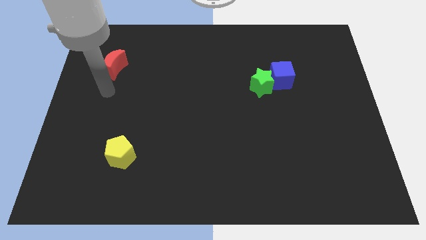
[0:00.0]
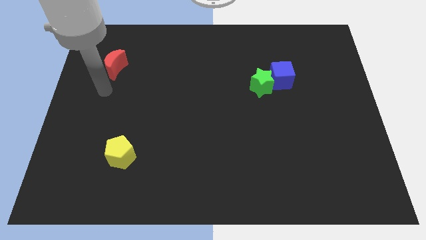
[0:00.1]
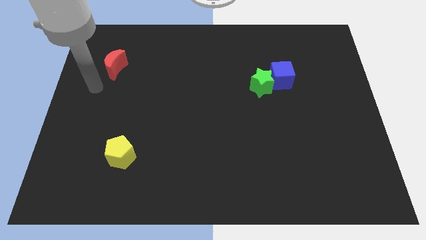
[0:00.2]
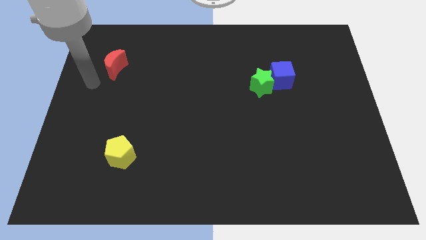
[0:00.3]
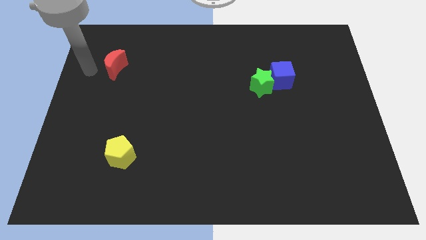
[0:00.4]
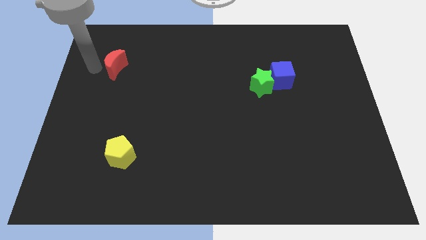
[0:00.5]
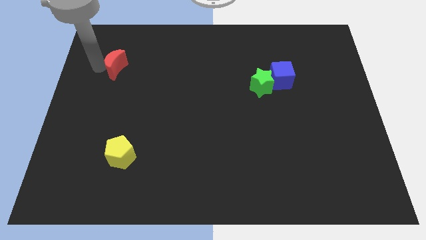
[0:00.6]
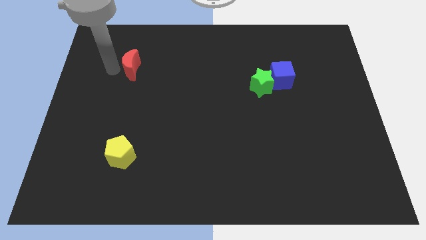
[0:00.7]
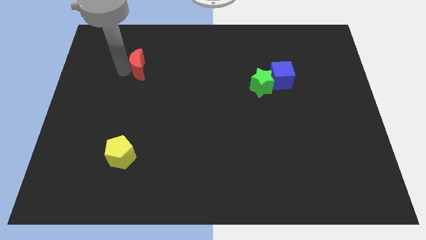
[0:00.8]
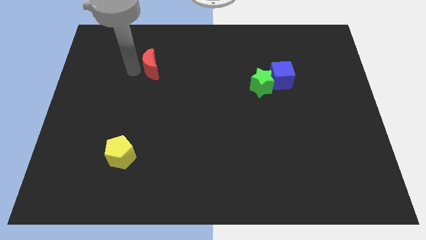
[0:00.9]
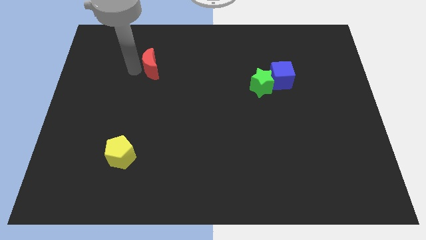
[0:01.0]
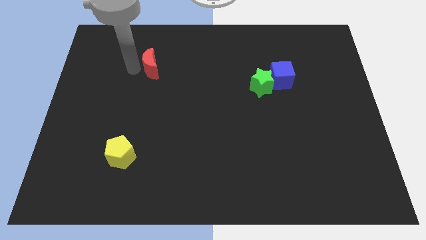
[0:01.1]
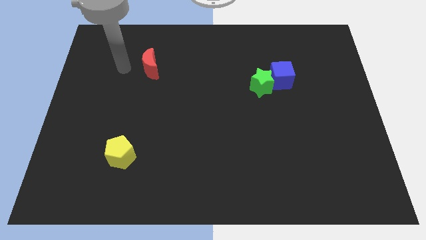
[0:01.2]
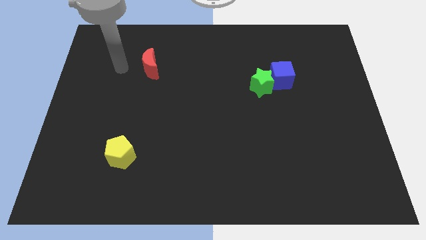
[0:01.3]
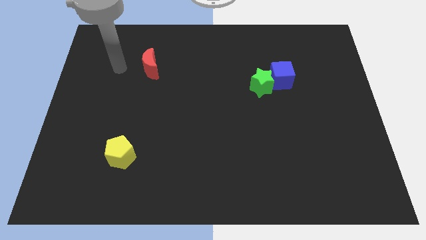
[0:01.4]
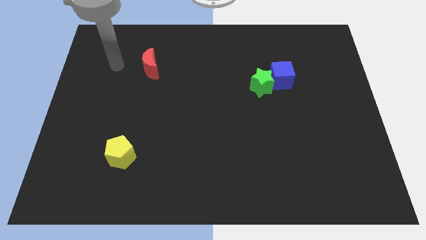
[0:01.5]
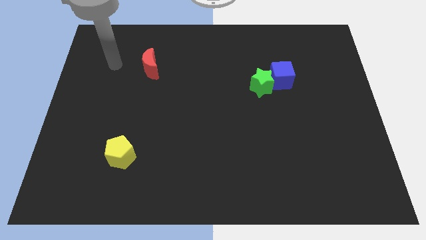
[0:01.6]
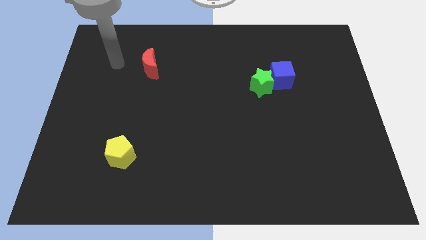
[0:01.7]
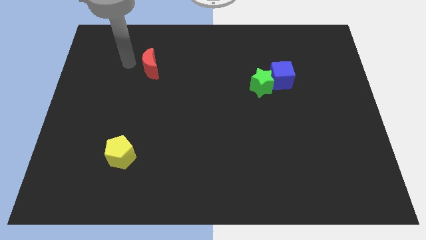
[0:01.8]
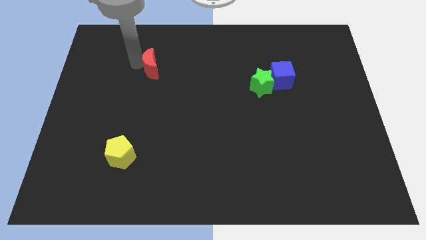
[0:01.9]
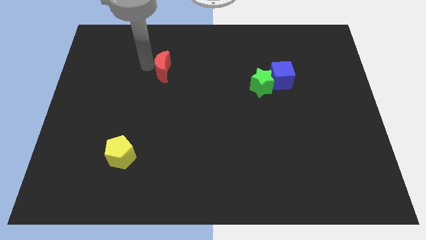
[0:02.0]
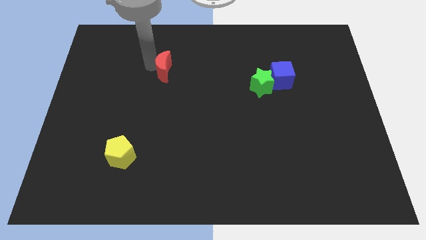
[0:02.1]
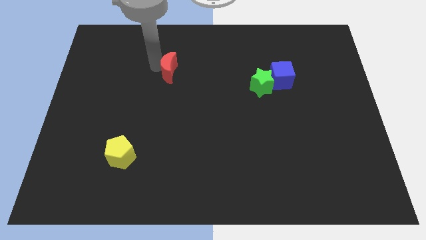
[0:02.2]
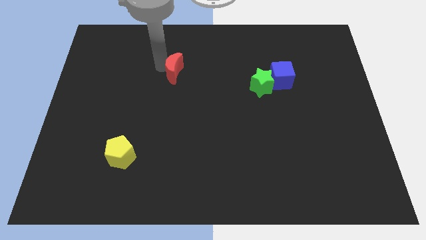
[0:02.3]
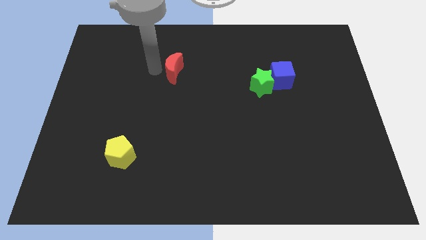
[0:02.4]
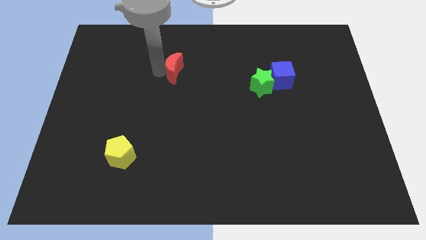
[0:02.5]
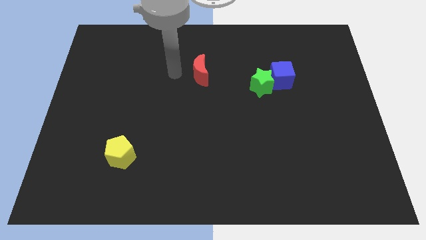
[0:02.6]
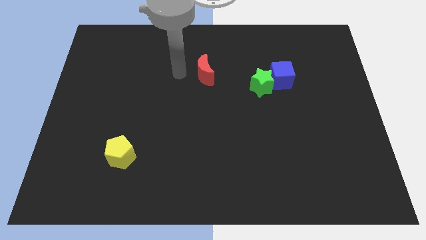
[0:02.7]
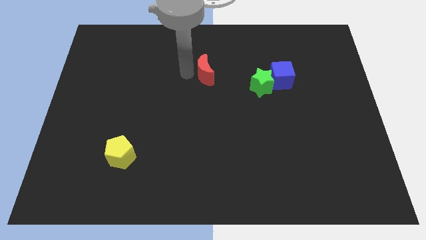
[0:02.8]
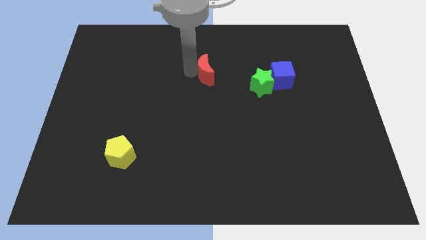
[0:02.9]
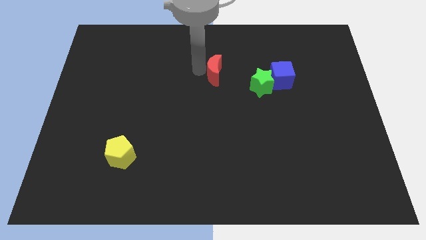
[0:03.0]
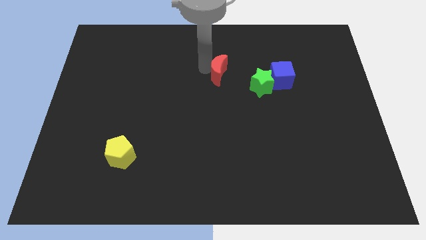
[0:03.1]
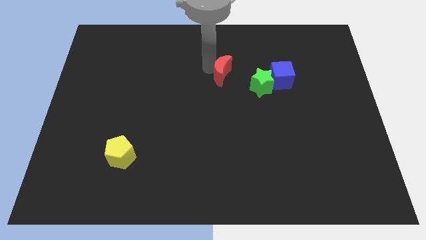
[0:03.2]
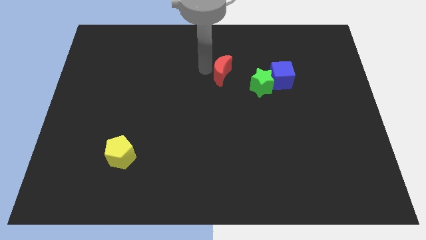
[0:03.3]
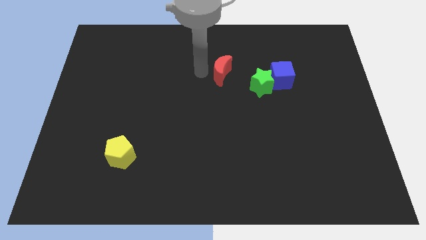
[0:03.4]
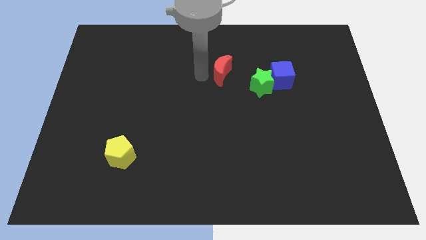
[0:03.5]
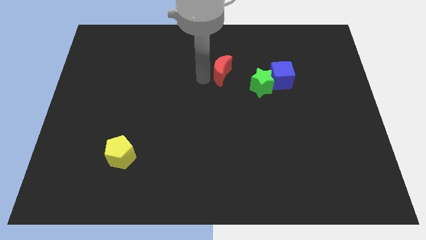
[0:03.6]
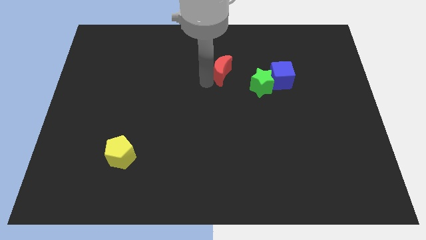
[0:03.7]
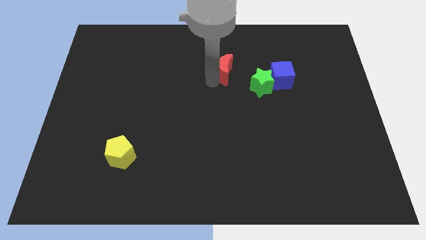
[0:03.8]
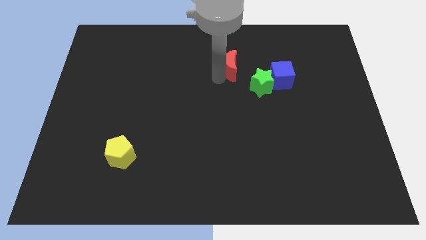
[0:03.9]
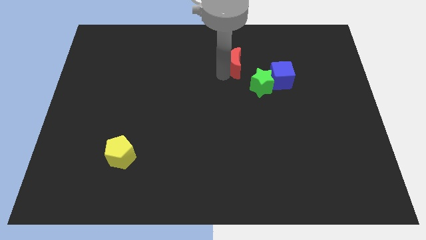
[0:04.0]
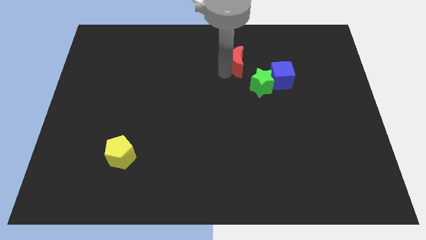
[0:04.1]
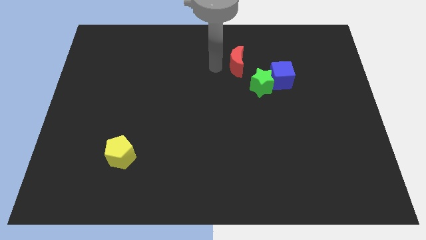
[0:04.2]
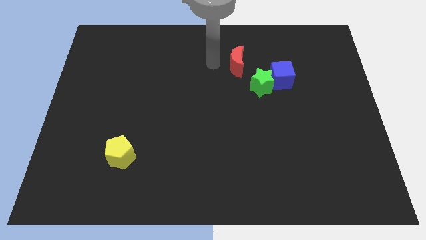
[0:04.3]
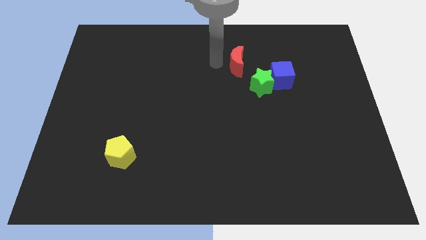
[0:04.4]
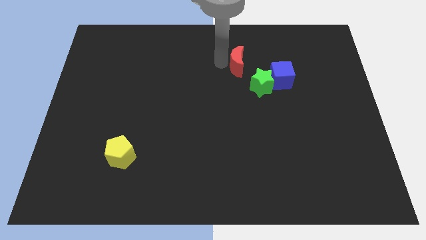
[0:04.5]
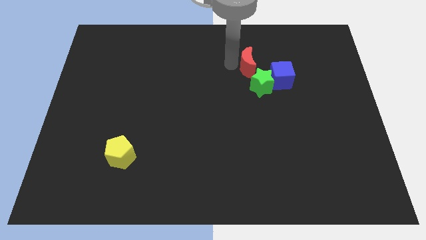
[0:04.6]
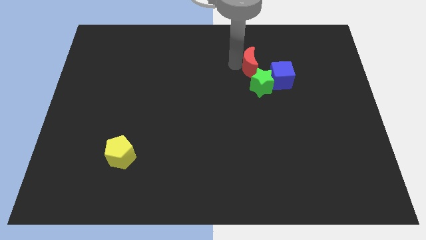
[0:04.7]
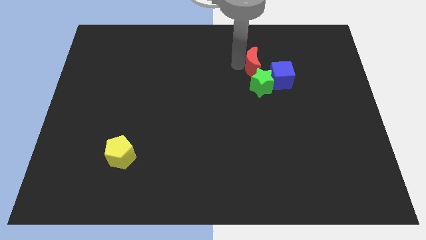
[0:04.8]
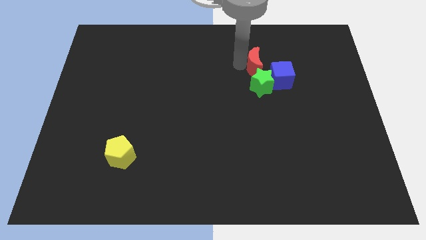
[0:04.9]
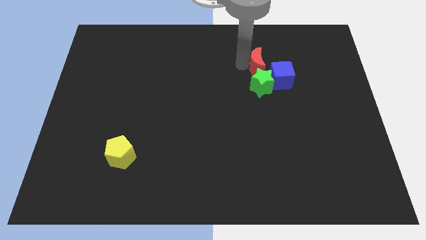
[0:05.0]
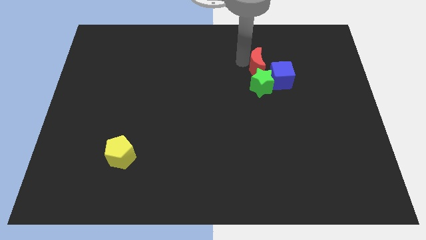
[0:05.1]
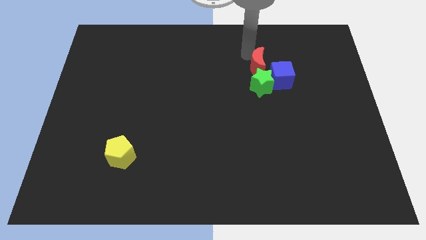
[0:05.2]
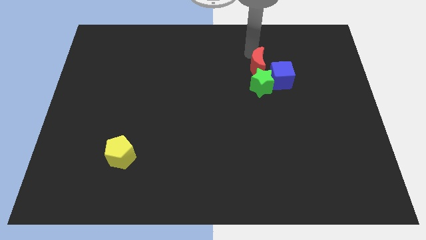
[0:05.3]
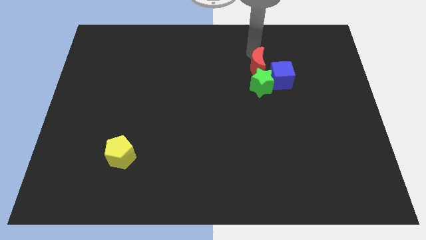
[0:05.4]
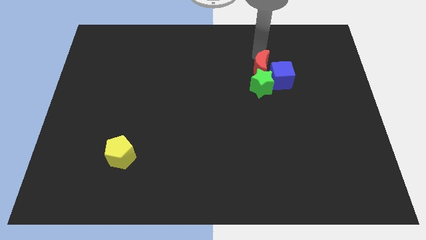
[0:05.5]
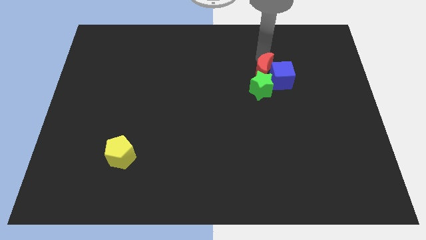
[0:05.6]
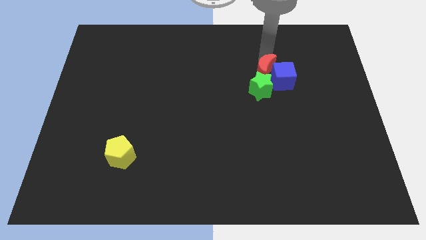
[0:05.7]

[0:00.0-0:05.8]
move the moon next to the cube

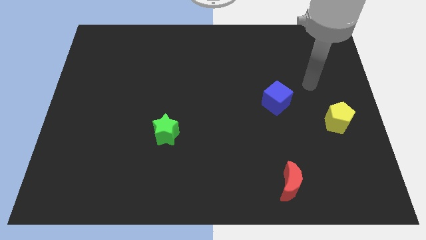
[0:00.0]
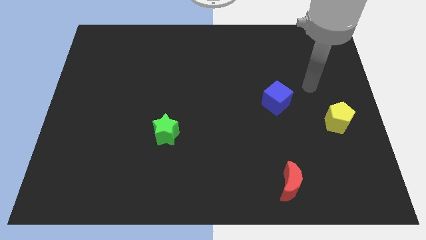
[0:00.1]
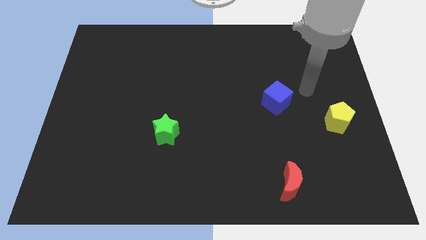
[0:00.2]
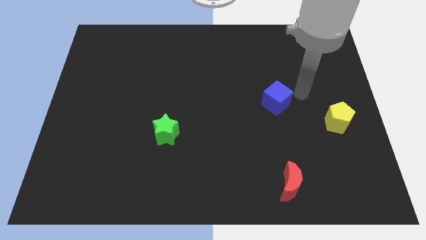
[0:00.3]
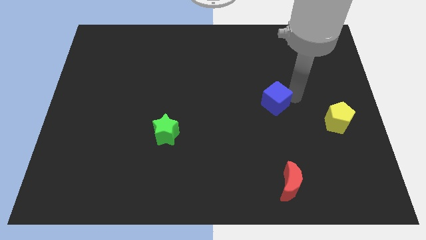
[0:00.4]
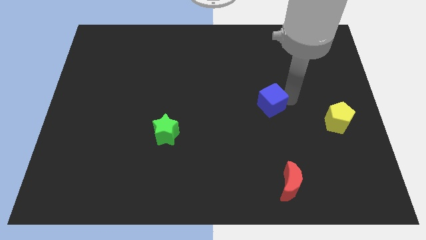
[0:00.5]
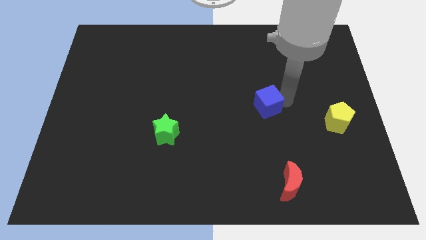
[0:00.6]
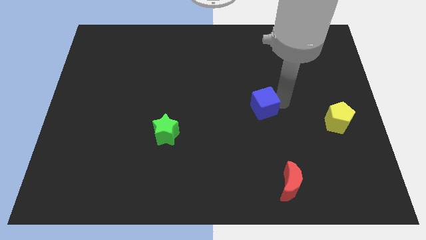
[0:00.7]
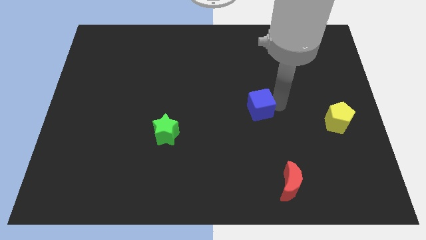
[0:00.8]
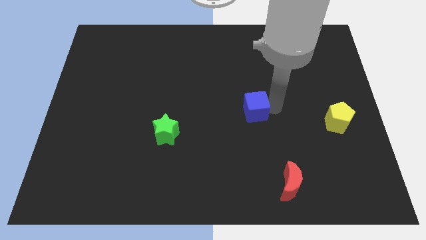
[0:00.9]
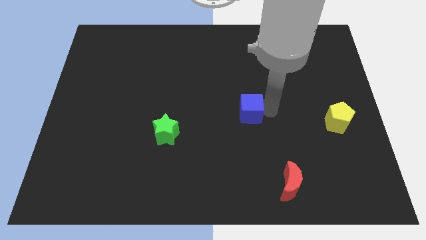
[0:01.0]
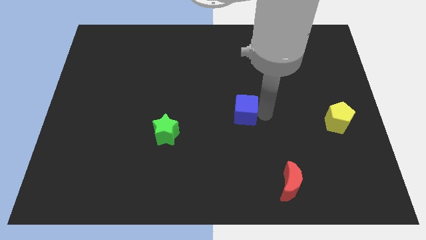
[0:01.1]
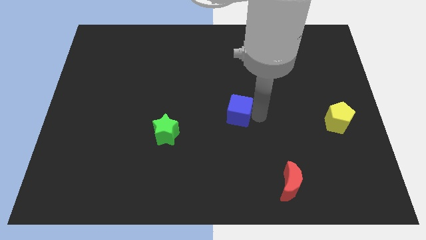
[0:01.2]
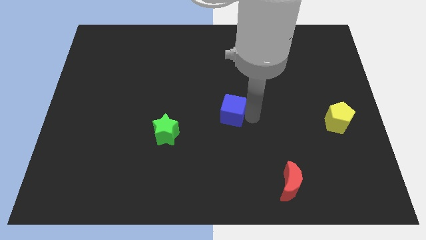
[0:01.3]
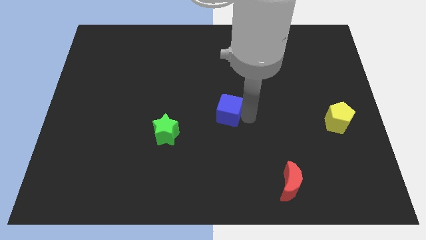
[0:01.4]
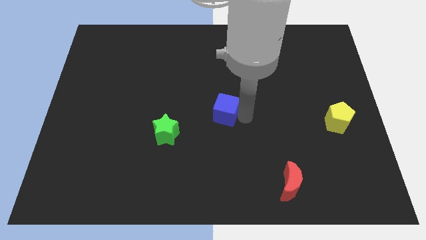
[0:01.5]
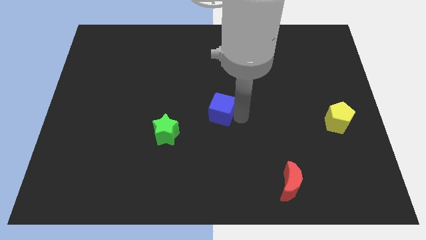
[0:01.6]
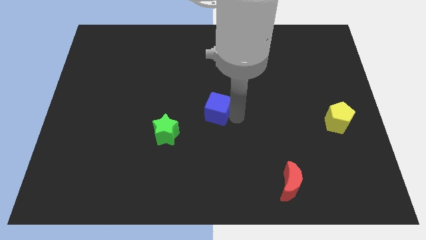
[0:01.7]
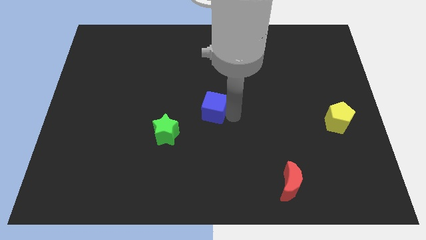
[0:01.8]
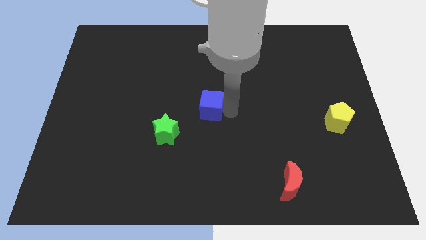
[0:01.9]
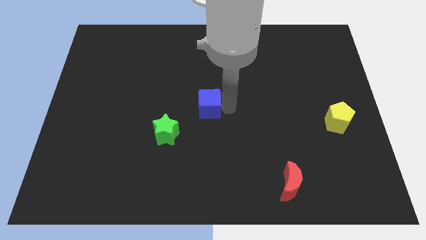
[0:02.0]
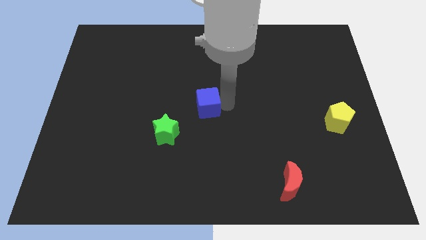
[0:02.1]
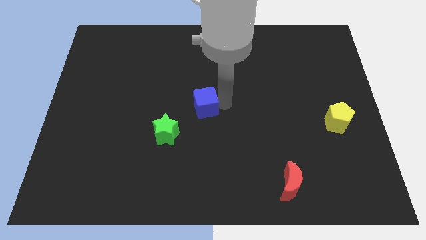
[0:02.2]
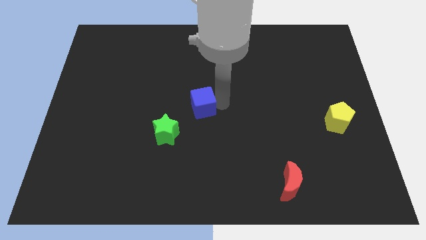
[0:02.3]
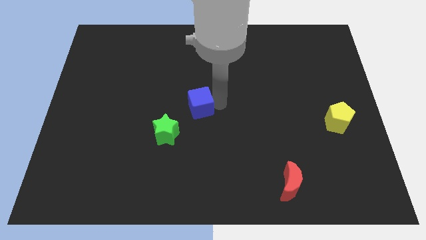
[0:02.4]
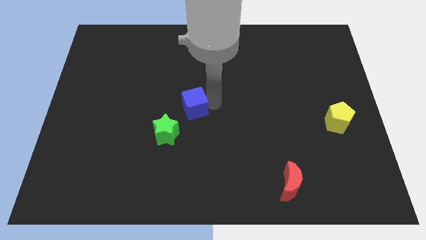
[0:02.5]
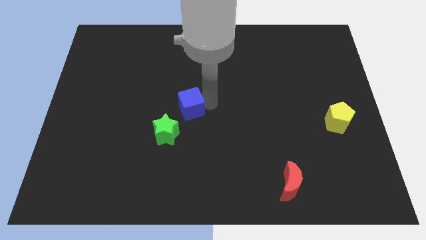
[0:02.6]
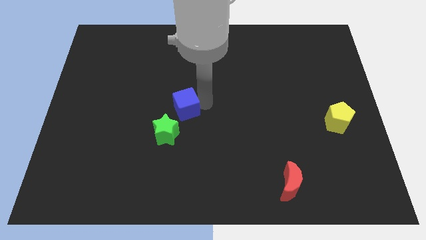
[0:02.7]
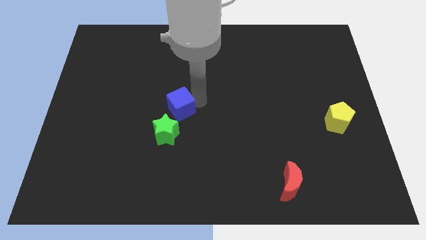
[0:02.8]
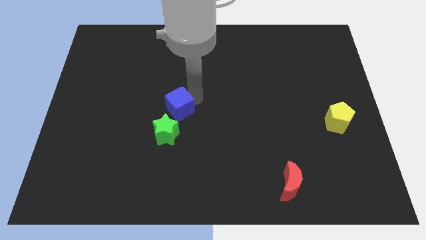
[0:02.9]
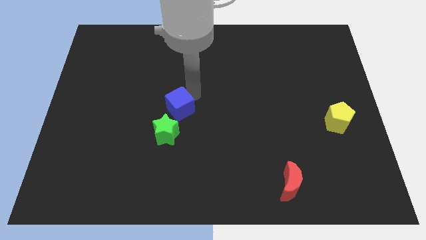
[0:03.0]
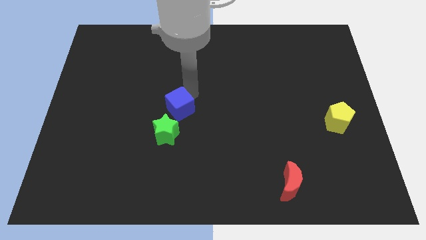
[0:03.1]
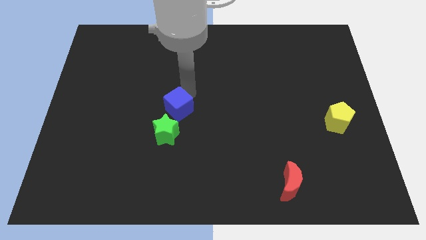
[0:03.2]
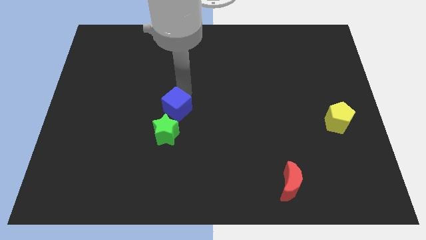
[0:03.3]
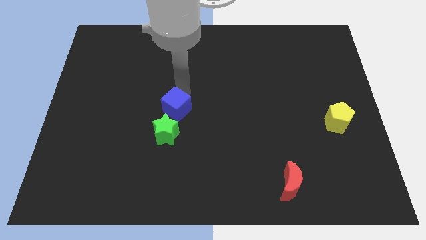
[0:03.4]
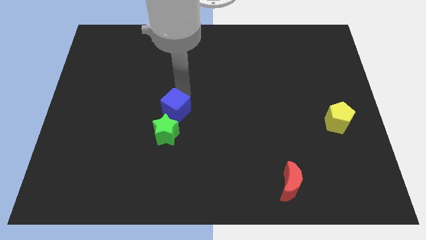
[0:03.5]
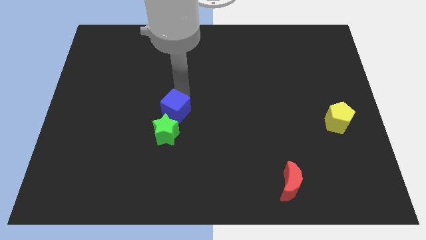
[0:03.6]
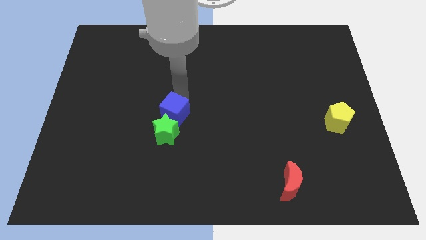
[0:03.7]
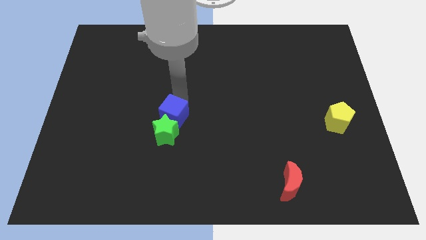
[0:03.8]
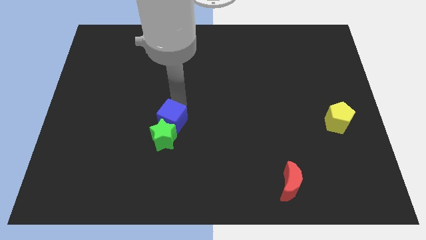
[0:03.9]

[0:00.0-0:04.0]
slide the blue block to the star
